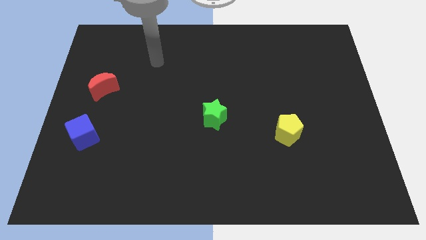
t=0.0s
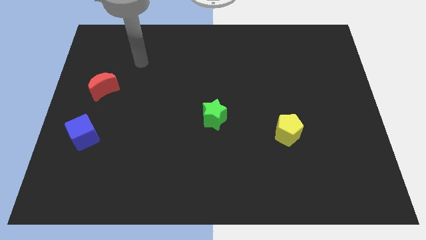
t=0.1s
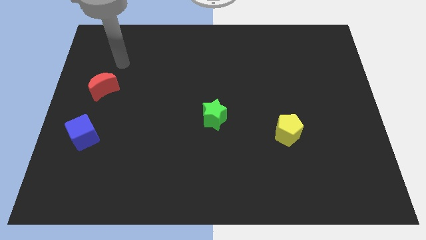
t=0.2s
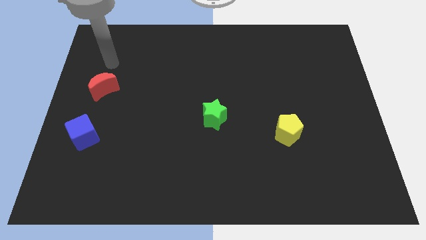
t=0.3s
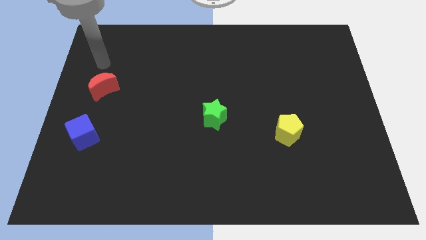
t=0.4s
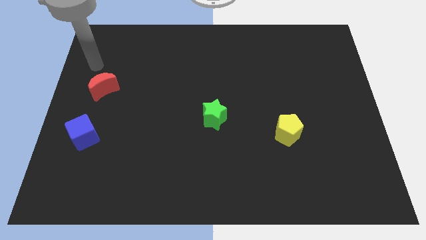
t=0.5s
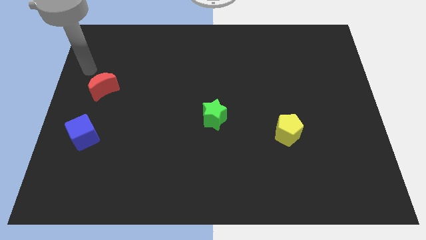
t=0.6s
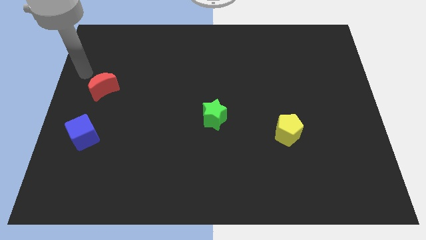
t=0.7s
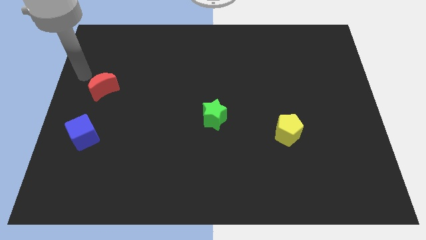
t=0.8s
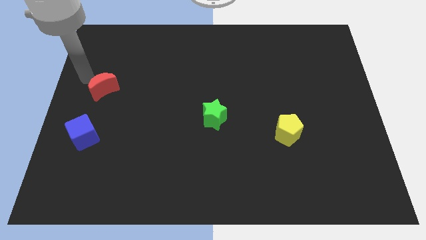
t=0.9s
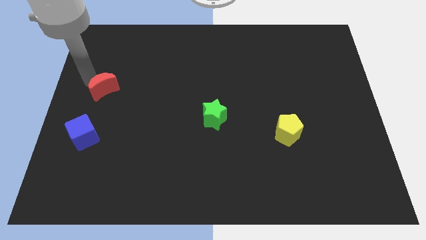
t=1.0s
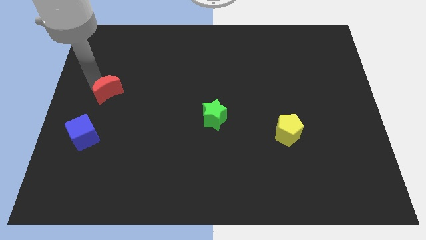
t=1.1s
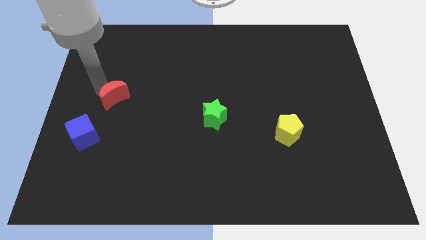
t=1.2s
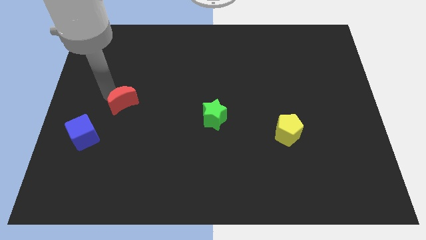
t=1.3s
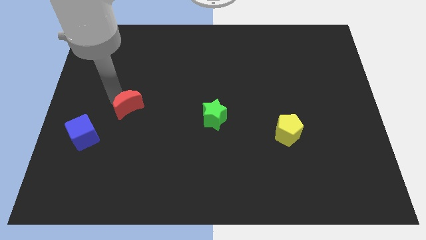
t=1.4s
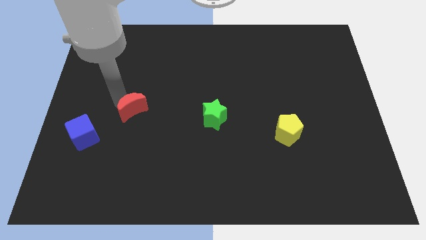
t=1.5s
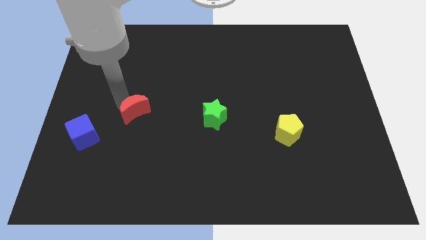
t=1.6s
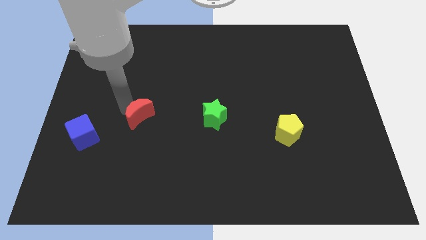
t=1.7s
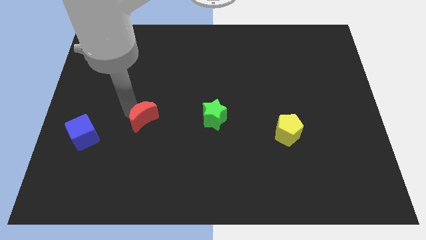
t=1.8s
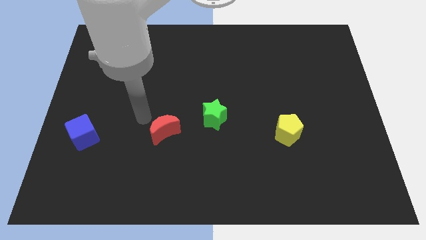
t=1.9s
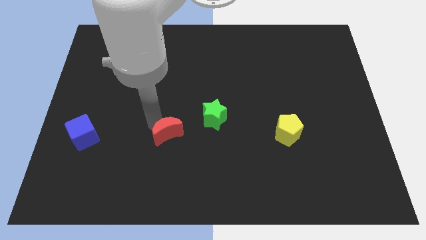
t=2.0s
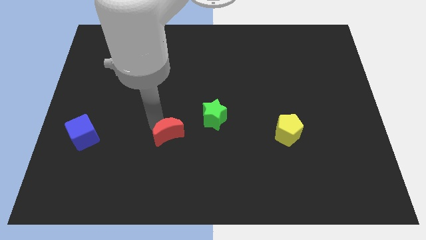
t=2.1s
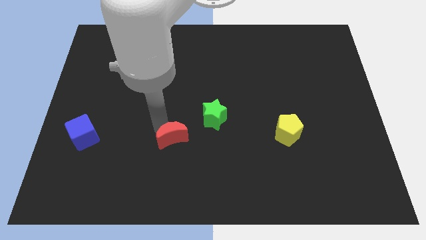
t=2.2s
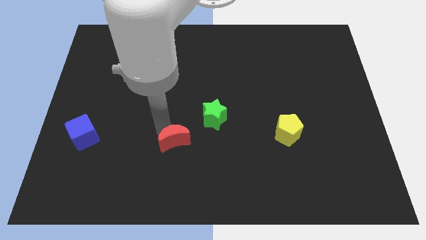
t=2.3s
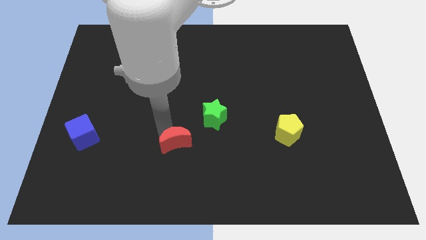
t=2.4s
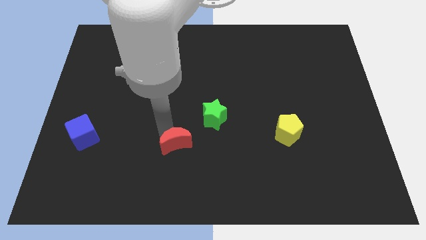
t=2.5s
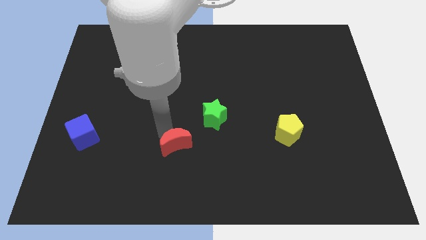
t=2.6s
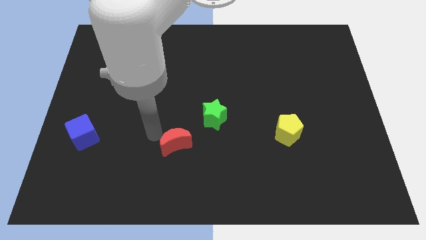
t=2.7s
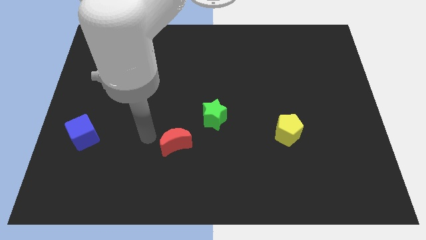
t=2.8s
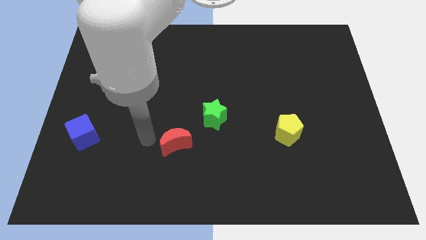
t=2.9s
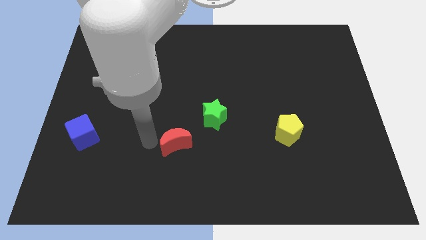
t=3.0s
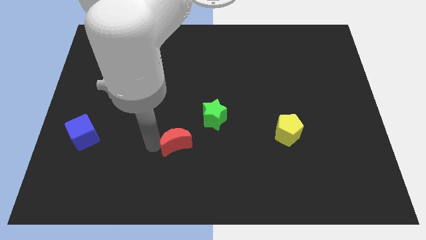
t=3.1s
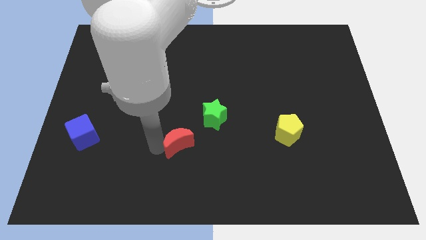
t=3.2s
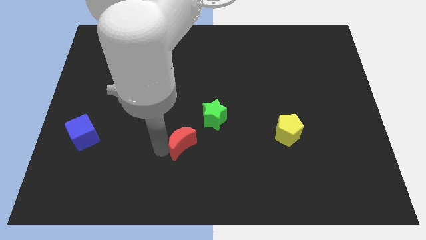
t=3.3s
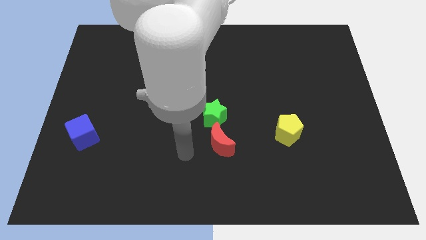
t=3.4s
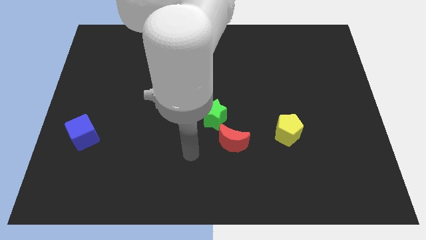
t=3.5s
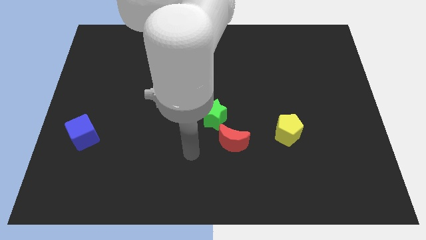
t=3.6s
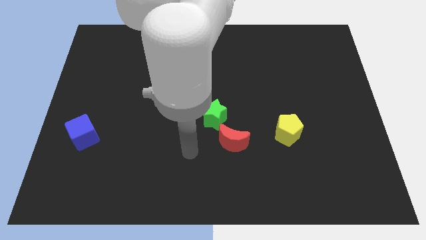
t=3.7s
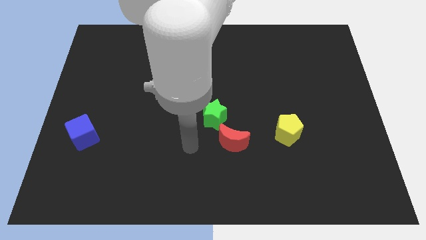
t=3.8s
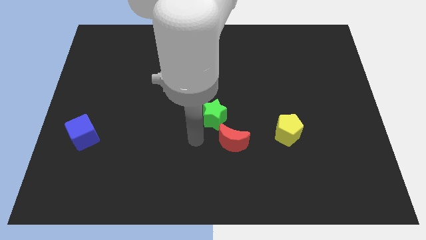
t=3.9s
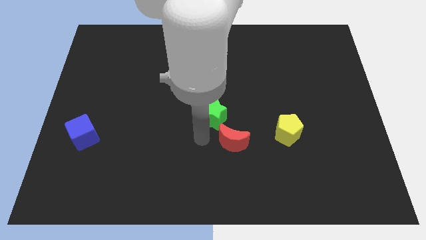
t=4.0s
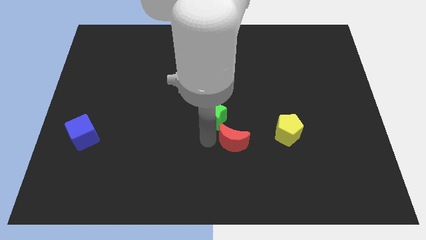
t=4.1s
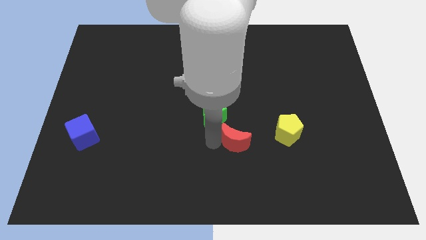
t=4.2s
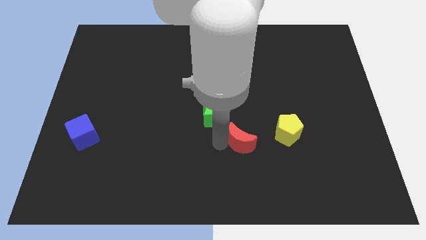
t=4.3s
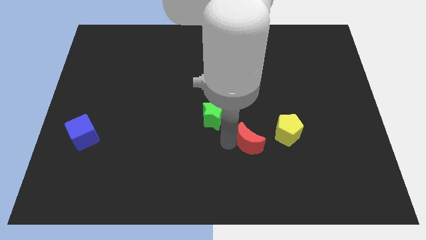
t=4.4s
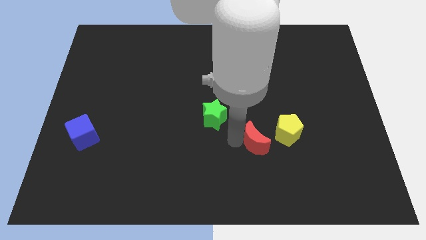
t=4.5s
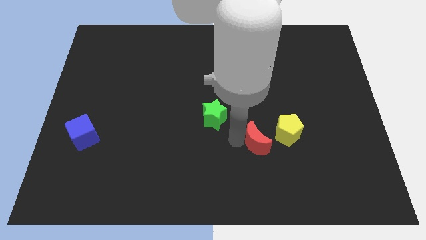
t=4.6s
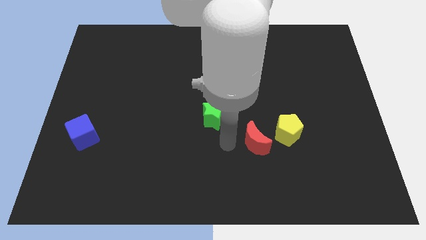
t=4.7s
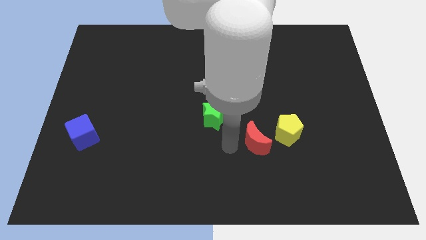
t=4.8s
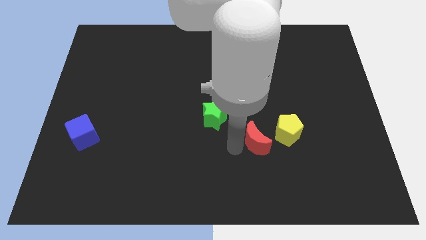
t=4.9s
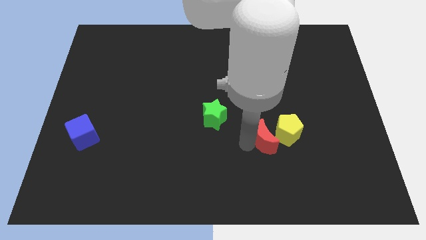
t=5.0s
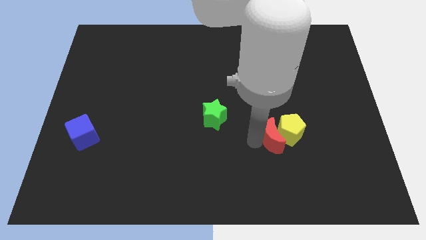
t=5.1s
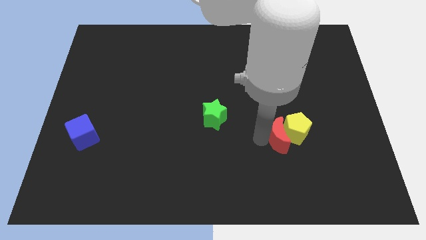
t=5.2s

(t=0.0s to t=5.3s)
put the moon close to the yellow block

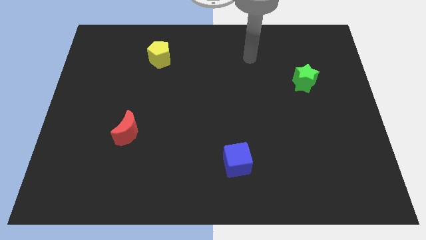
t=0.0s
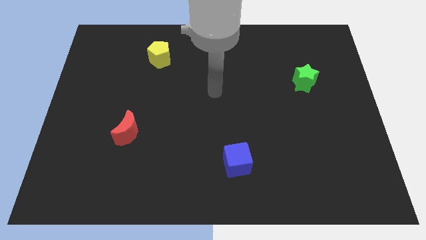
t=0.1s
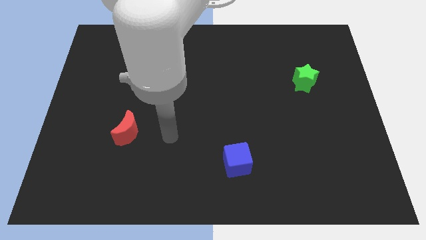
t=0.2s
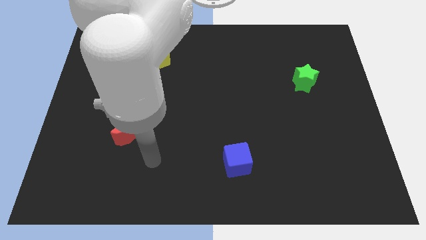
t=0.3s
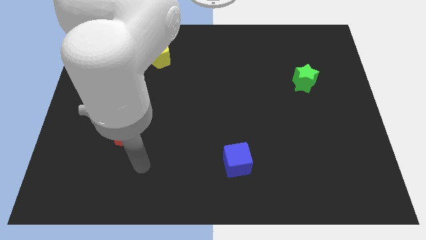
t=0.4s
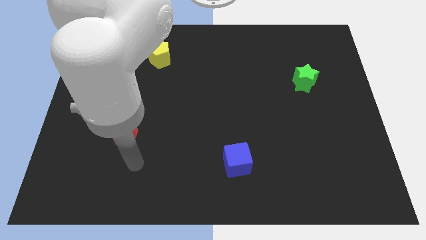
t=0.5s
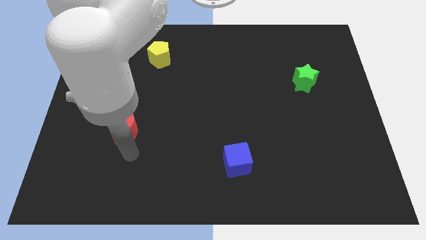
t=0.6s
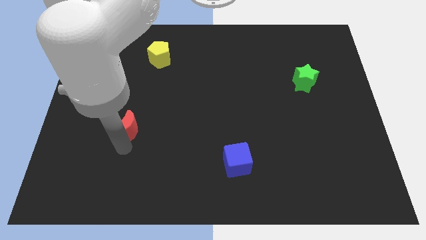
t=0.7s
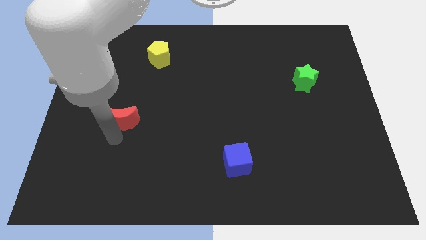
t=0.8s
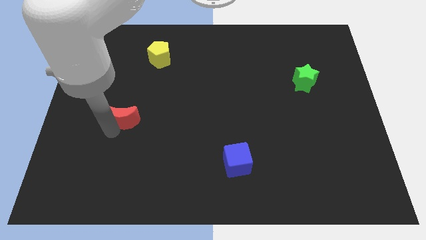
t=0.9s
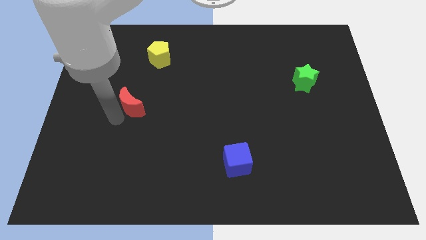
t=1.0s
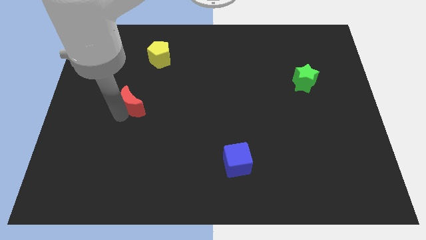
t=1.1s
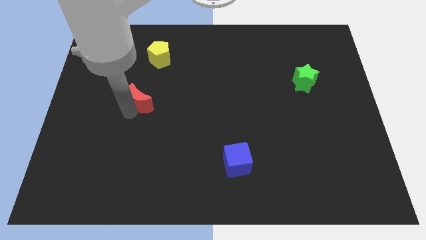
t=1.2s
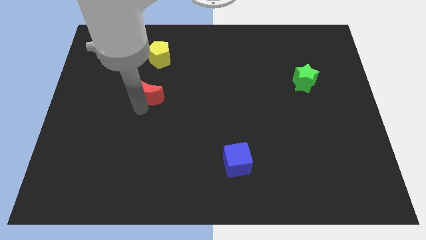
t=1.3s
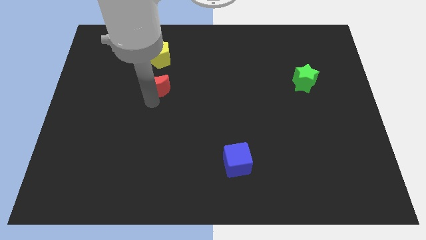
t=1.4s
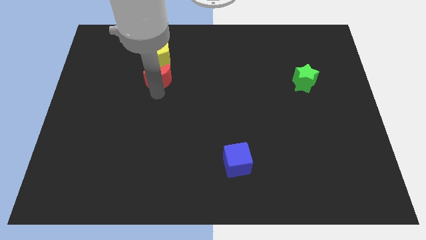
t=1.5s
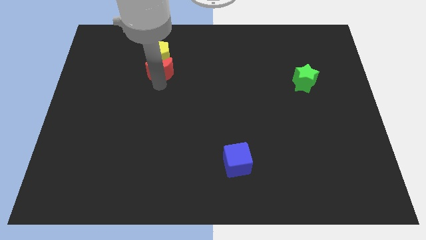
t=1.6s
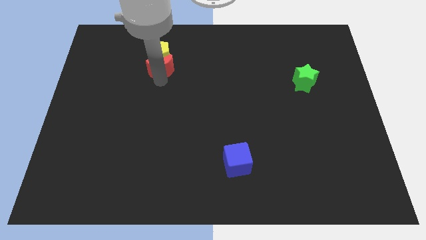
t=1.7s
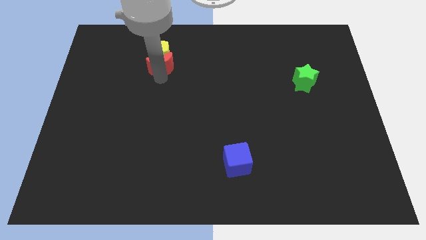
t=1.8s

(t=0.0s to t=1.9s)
slide the moon close to the pentagon

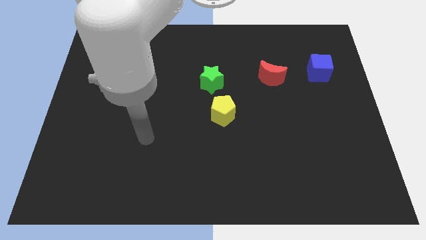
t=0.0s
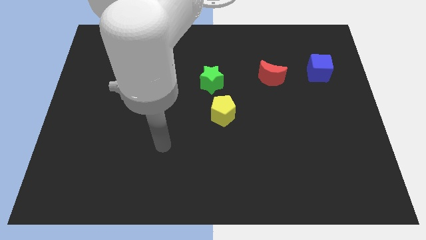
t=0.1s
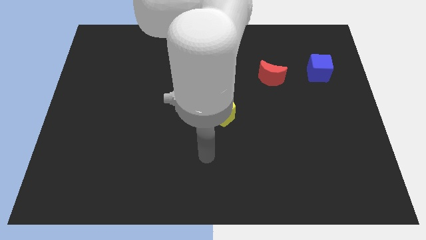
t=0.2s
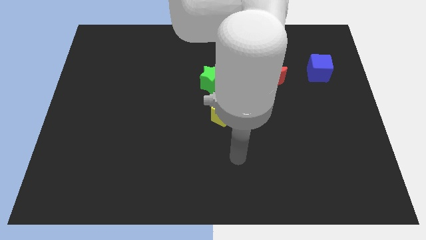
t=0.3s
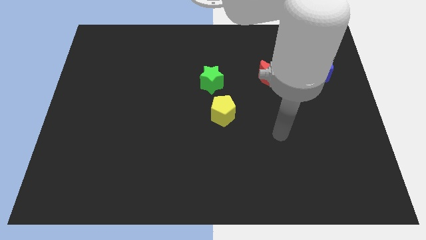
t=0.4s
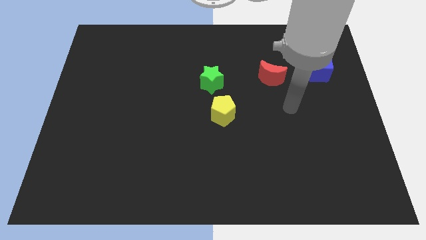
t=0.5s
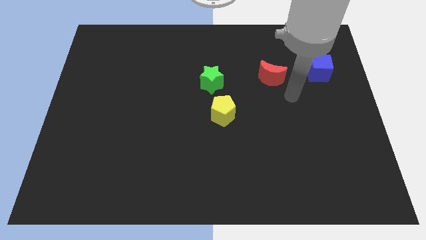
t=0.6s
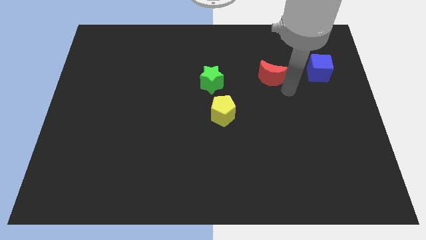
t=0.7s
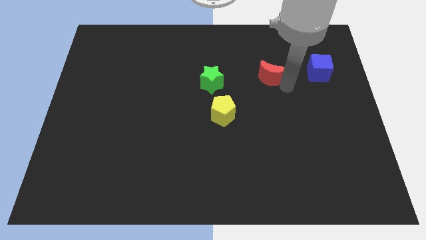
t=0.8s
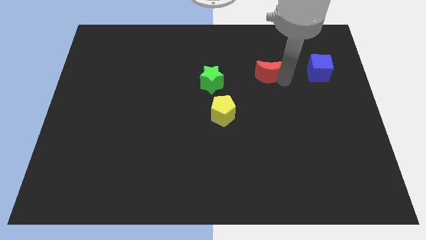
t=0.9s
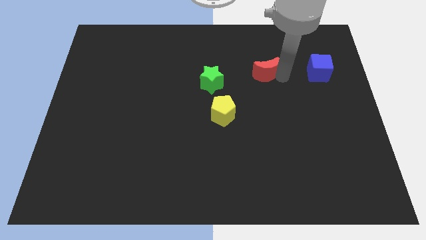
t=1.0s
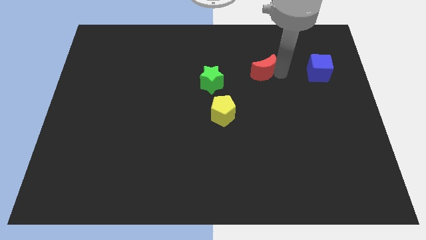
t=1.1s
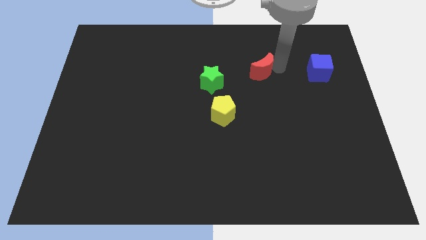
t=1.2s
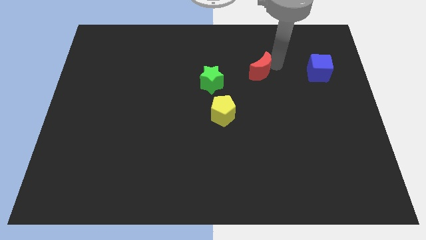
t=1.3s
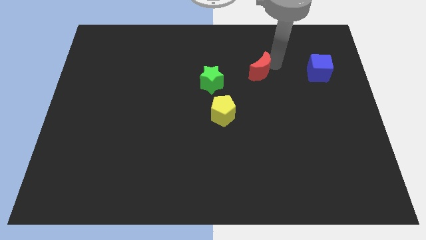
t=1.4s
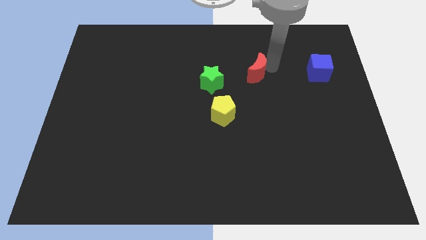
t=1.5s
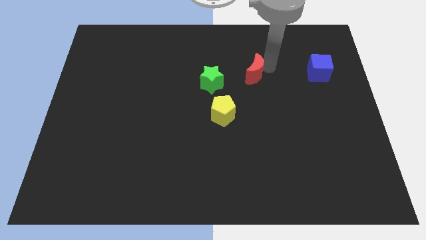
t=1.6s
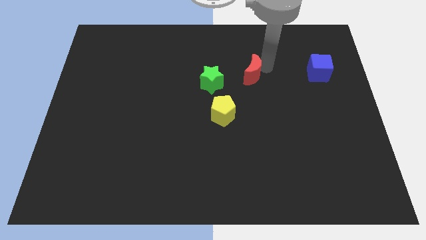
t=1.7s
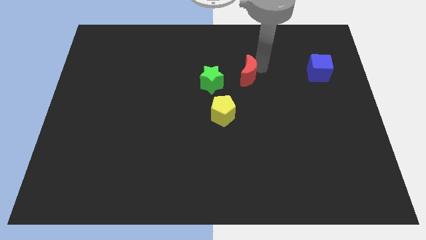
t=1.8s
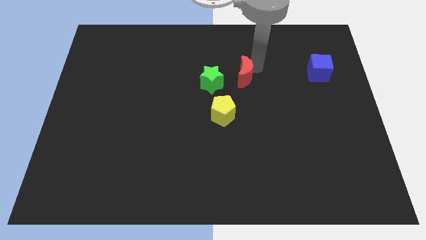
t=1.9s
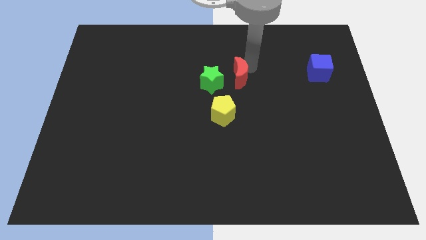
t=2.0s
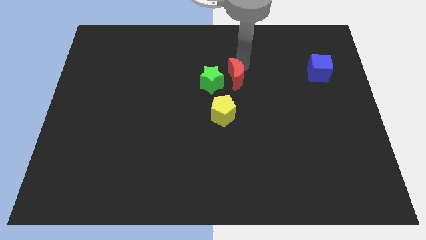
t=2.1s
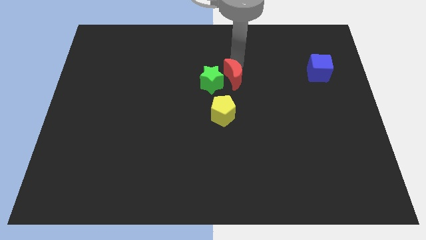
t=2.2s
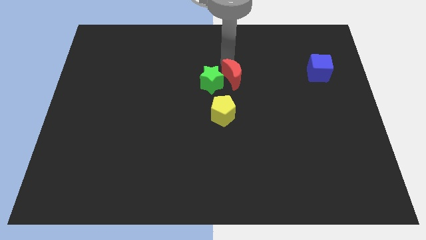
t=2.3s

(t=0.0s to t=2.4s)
push the moon next to the green star
